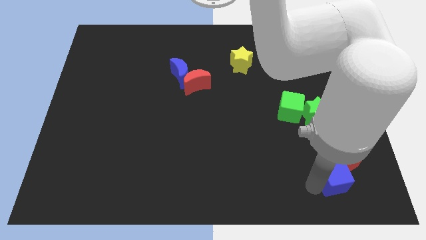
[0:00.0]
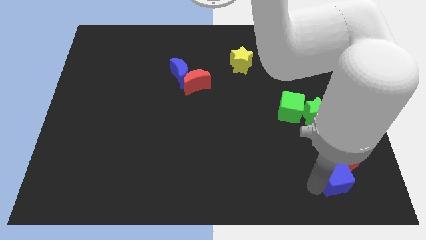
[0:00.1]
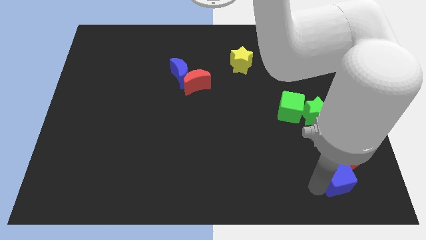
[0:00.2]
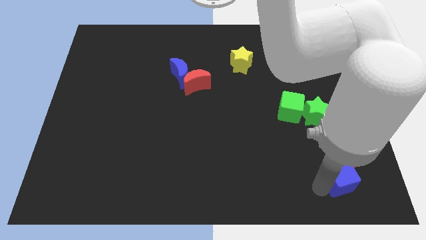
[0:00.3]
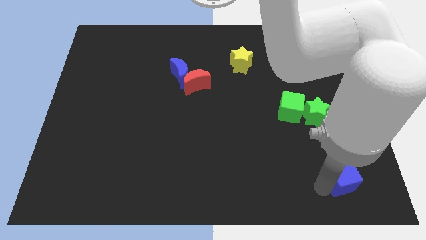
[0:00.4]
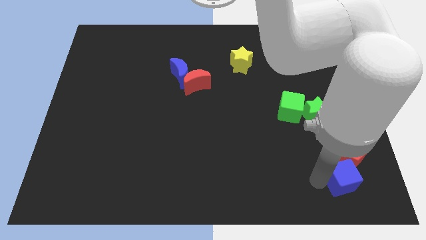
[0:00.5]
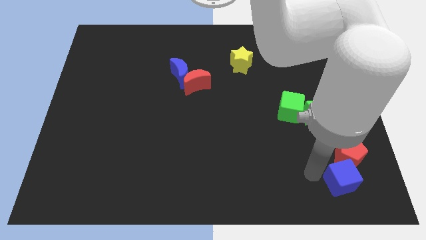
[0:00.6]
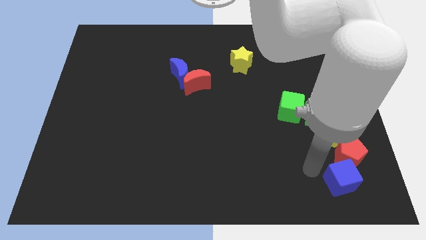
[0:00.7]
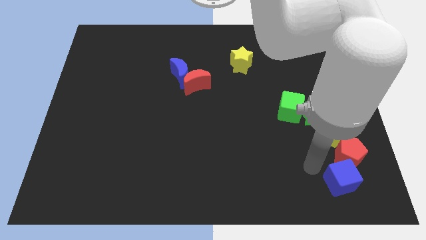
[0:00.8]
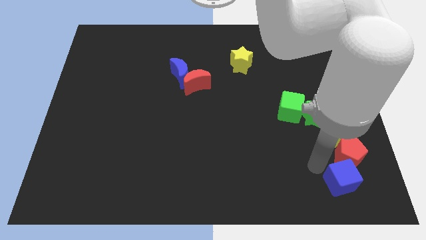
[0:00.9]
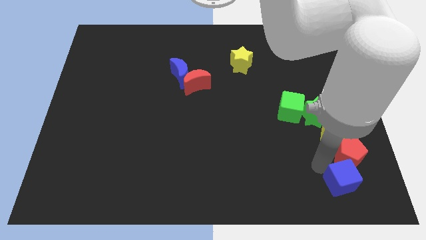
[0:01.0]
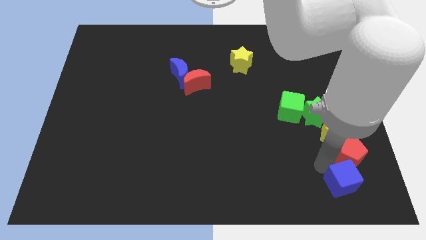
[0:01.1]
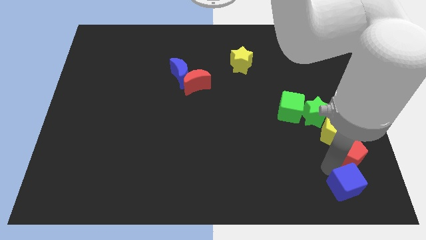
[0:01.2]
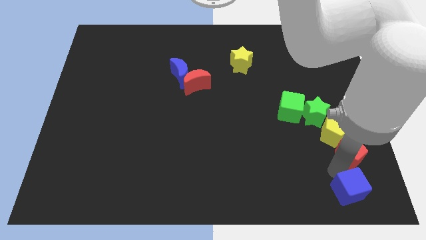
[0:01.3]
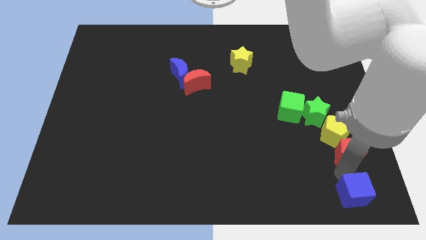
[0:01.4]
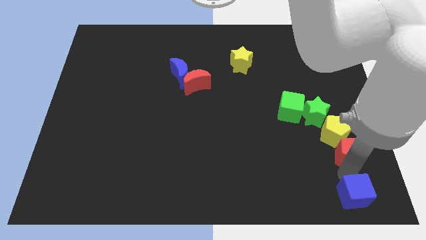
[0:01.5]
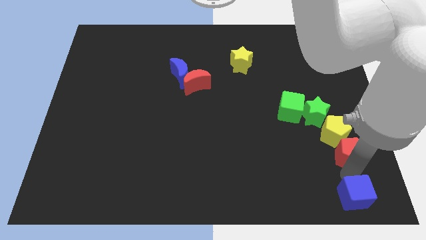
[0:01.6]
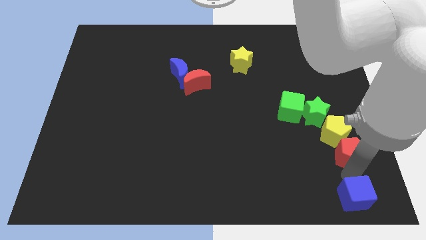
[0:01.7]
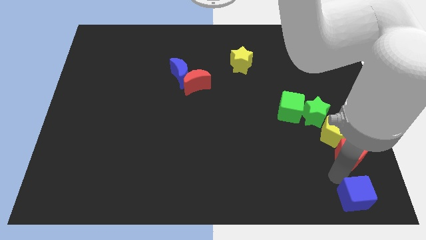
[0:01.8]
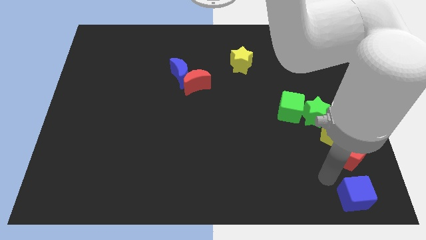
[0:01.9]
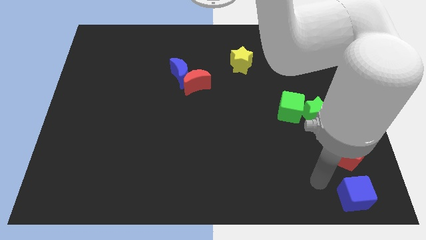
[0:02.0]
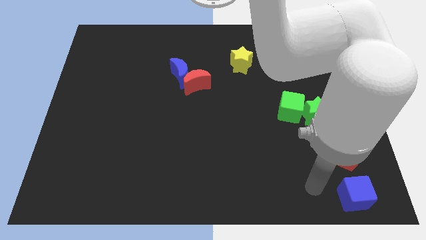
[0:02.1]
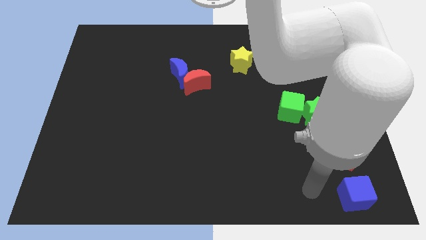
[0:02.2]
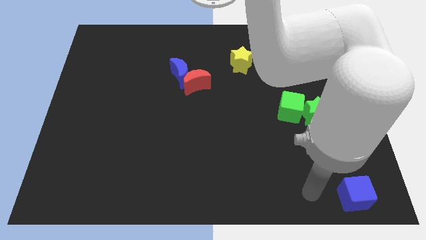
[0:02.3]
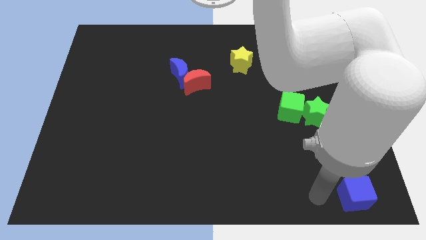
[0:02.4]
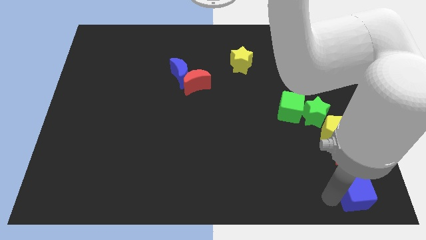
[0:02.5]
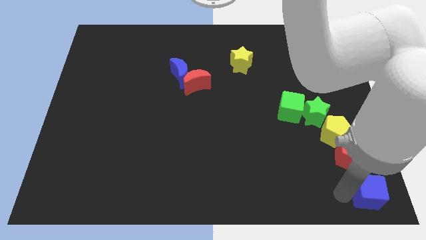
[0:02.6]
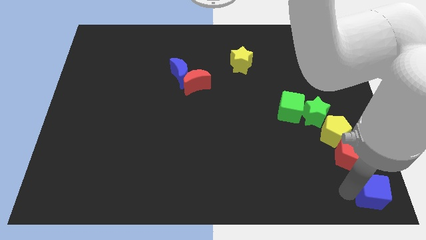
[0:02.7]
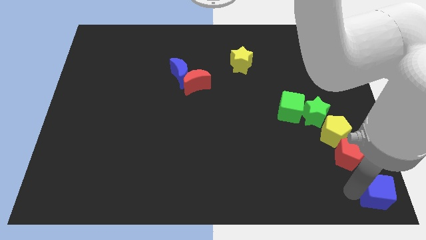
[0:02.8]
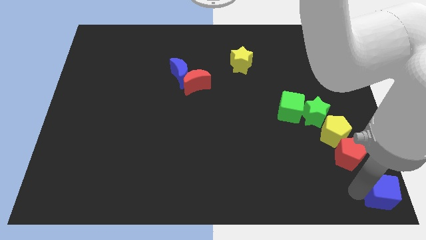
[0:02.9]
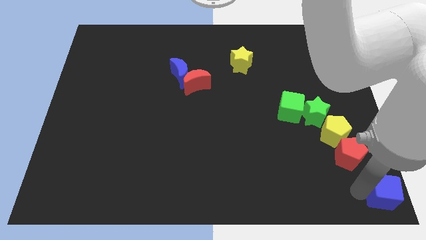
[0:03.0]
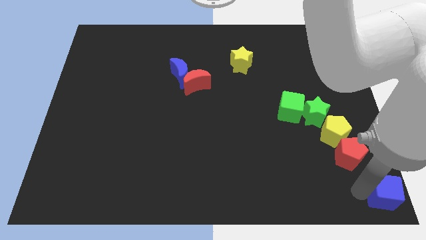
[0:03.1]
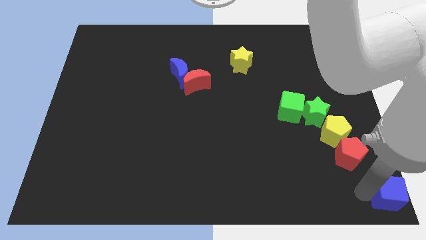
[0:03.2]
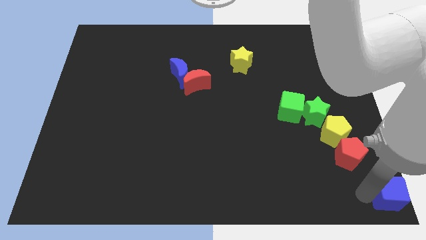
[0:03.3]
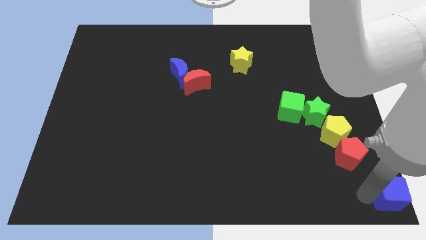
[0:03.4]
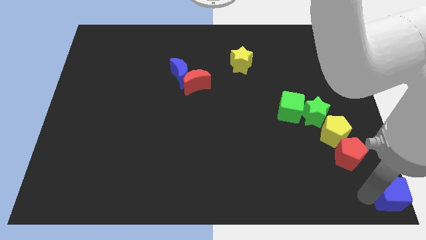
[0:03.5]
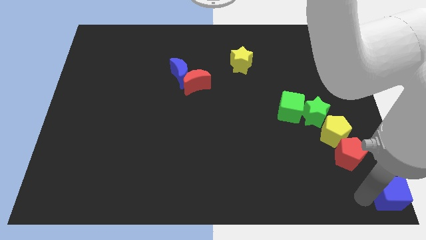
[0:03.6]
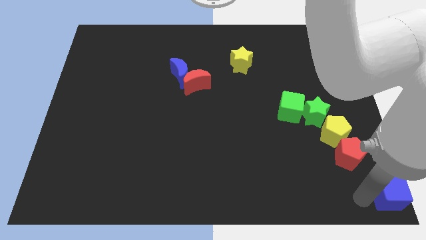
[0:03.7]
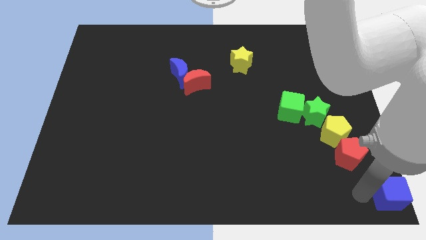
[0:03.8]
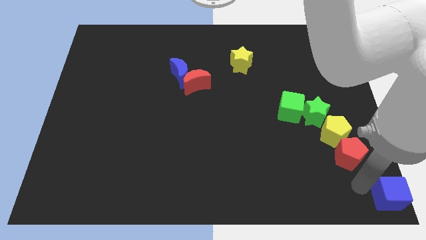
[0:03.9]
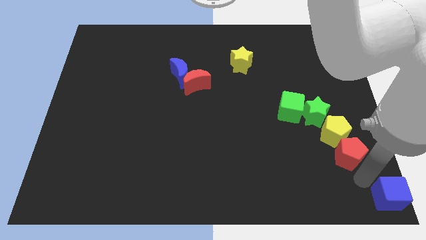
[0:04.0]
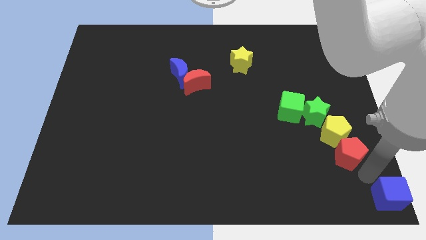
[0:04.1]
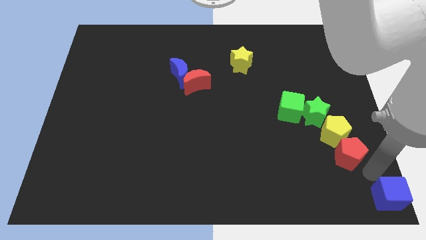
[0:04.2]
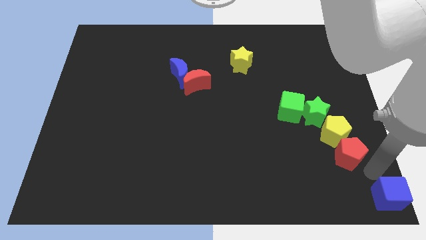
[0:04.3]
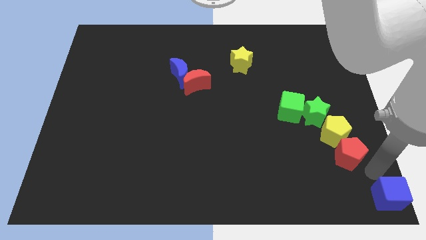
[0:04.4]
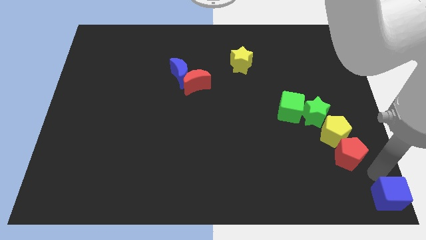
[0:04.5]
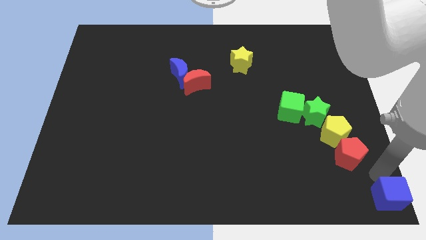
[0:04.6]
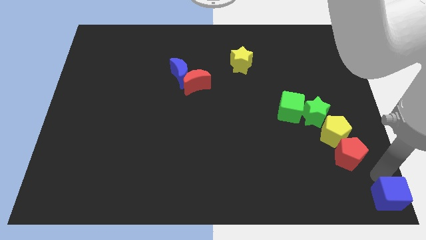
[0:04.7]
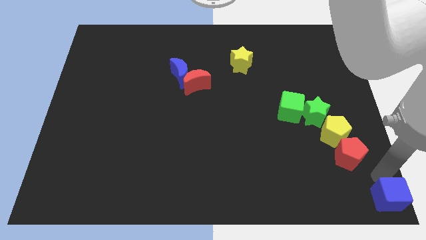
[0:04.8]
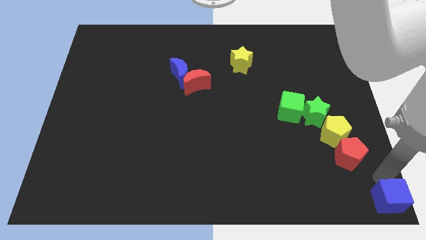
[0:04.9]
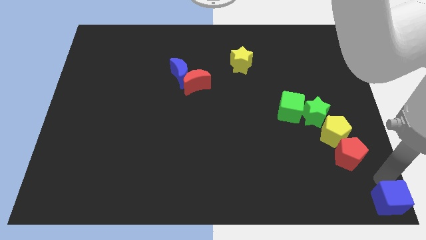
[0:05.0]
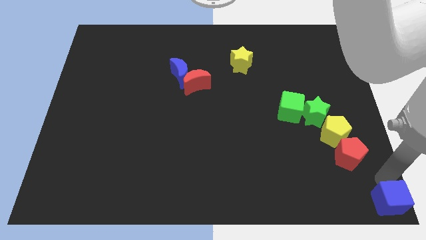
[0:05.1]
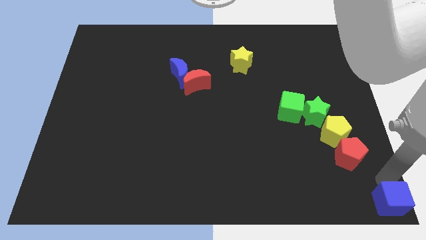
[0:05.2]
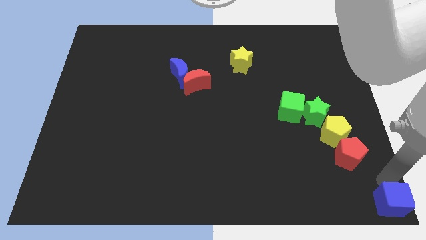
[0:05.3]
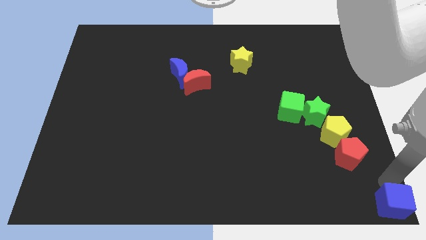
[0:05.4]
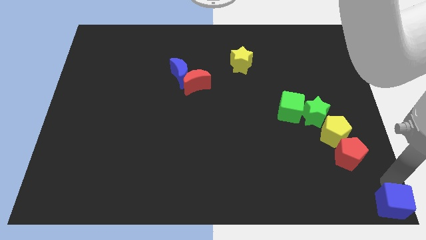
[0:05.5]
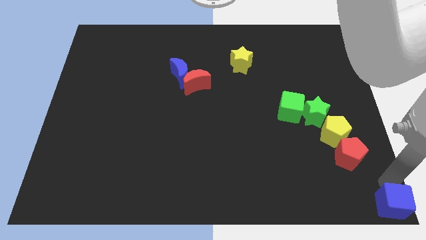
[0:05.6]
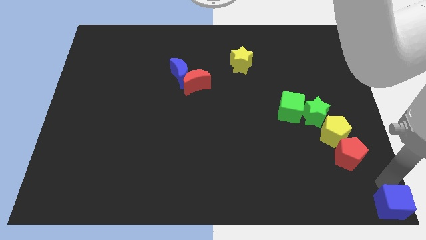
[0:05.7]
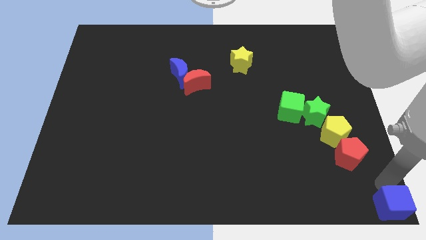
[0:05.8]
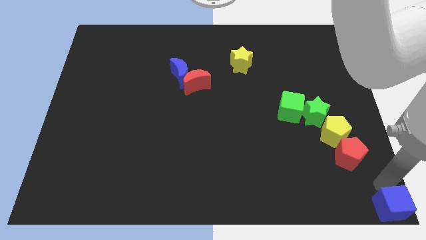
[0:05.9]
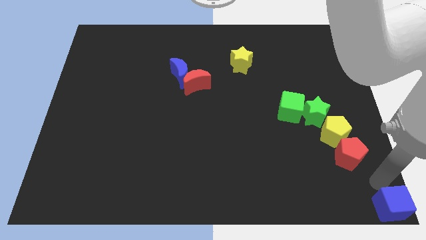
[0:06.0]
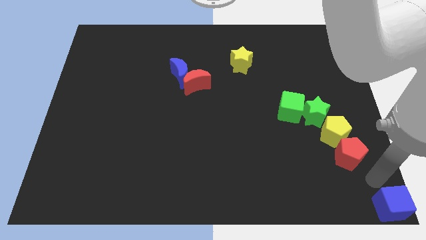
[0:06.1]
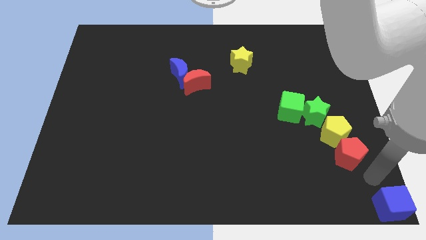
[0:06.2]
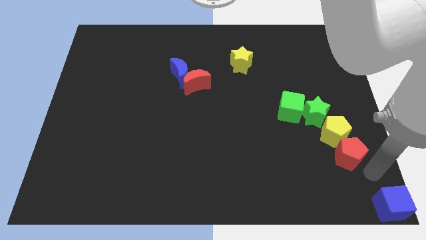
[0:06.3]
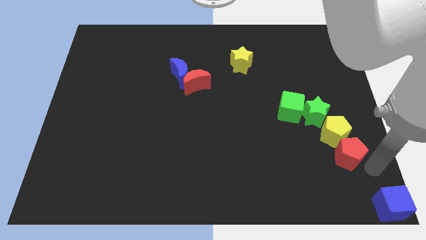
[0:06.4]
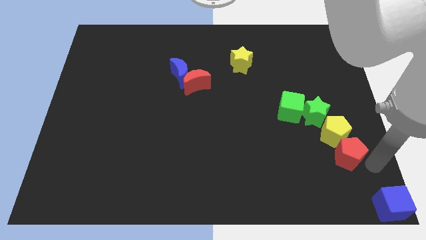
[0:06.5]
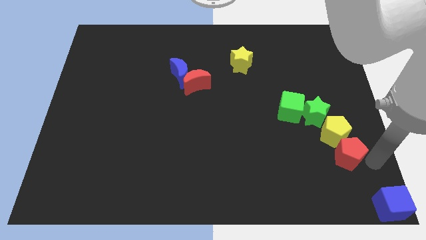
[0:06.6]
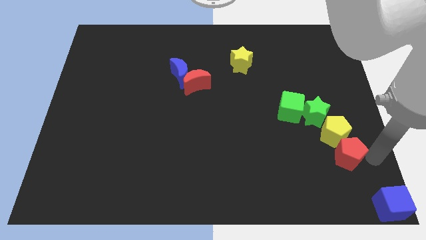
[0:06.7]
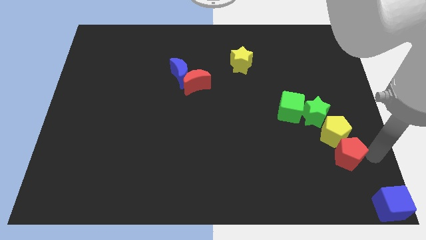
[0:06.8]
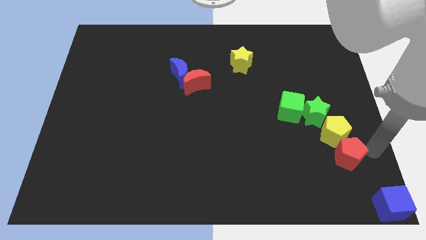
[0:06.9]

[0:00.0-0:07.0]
place the blue cube at the bottom right corner of the board

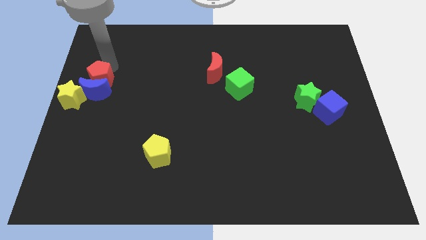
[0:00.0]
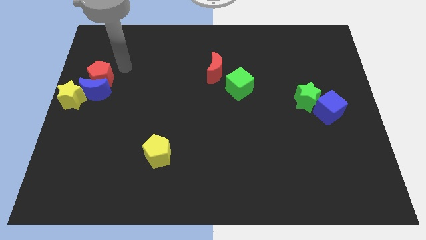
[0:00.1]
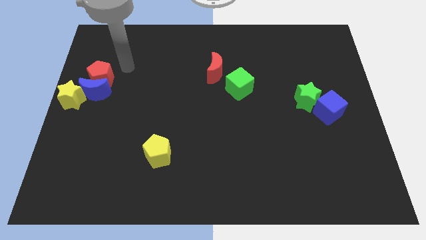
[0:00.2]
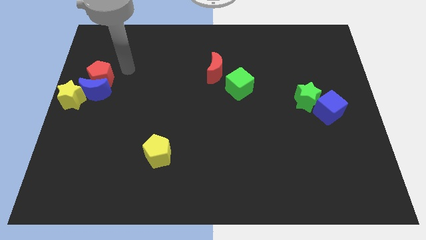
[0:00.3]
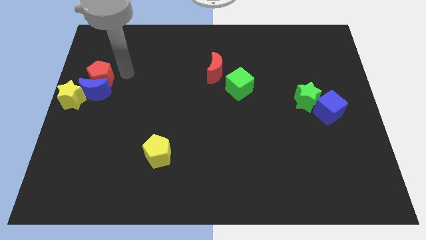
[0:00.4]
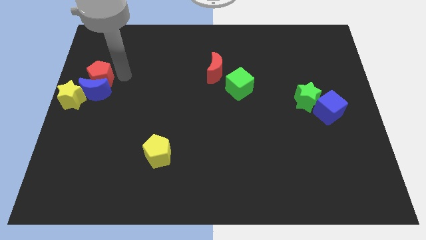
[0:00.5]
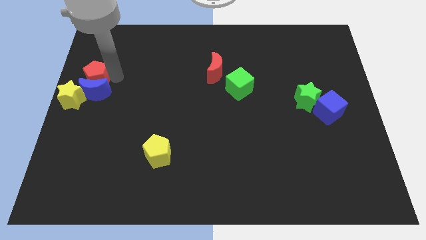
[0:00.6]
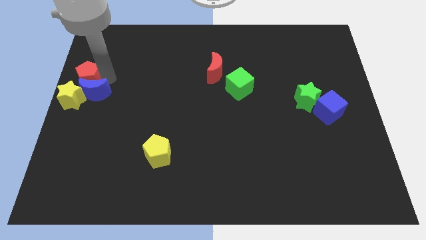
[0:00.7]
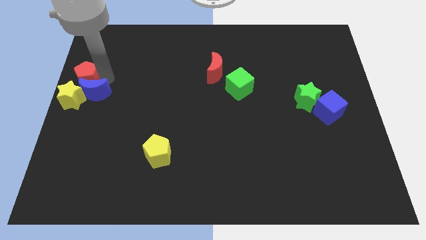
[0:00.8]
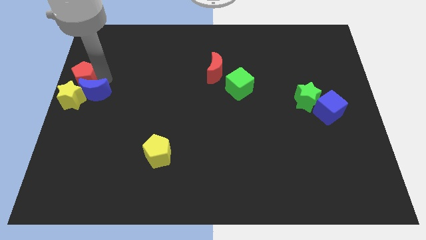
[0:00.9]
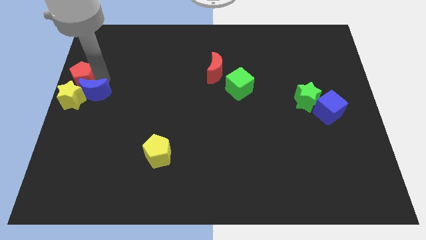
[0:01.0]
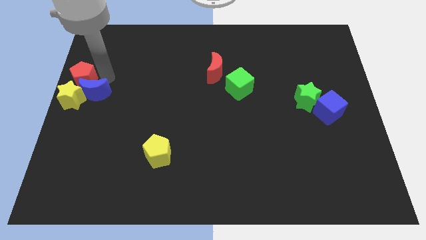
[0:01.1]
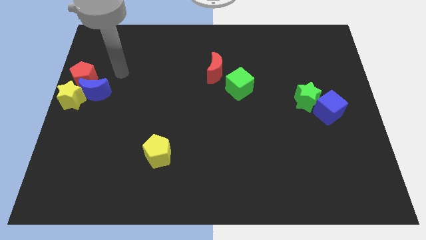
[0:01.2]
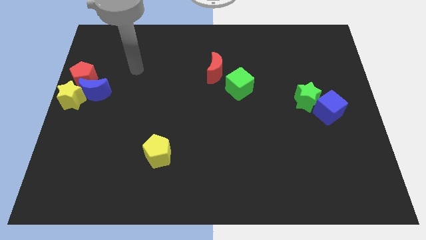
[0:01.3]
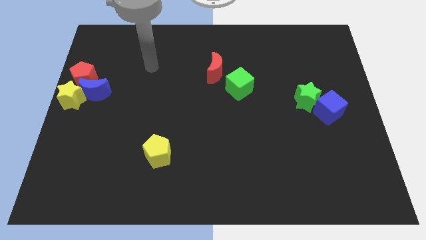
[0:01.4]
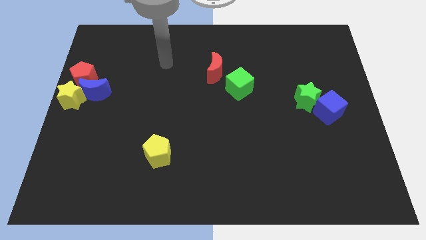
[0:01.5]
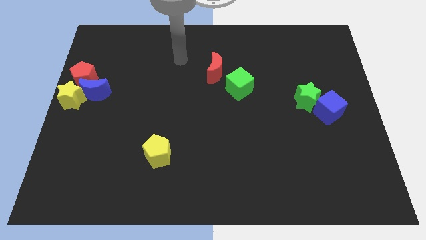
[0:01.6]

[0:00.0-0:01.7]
place the red pentagon vertically above the yellow star

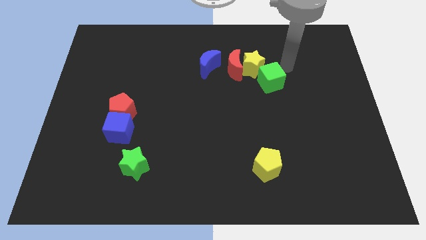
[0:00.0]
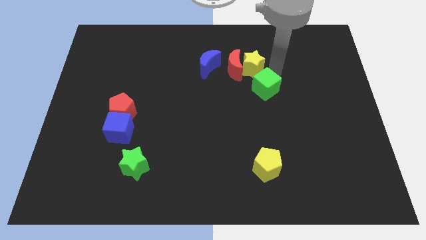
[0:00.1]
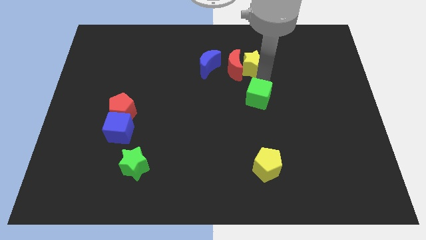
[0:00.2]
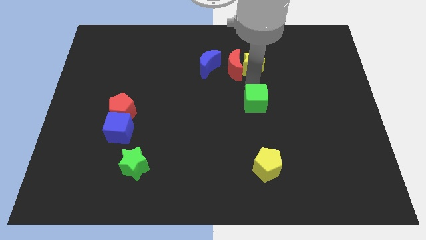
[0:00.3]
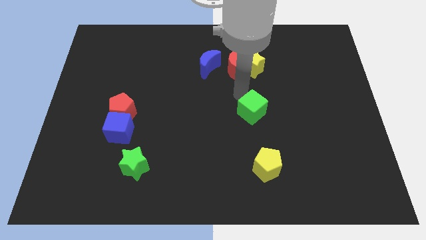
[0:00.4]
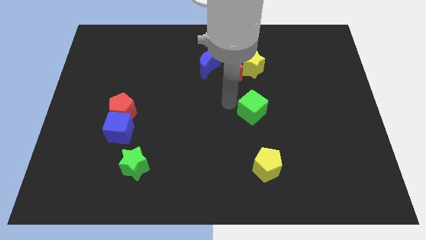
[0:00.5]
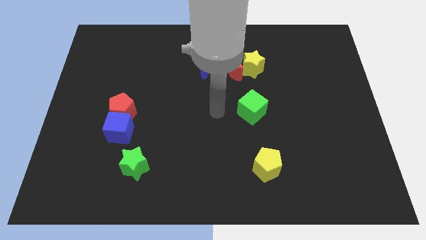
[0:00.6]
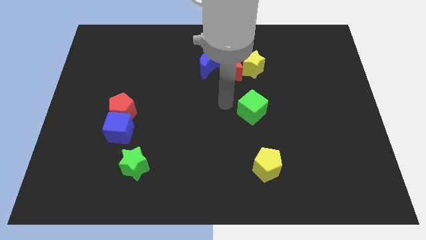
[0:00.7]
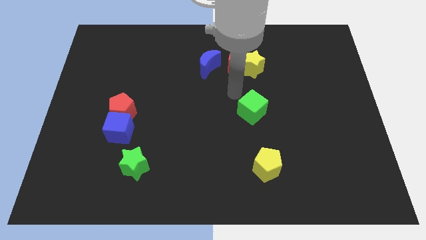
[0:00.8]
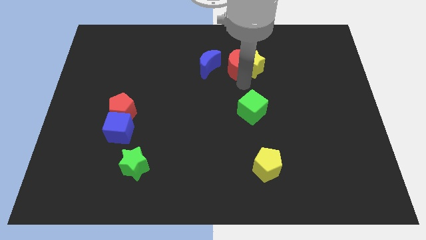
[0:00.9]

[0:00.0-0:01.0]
push the green cube in between the yellow star and the yellow pentagon
